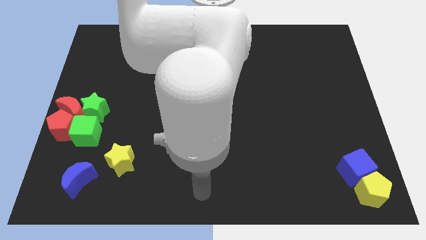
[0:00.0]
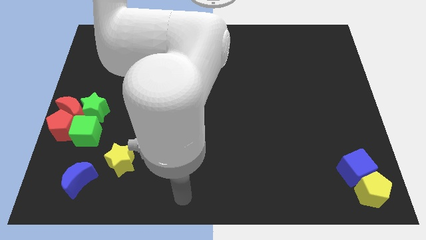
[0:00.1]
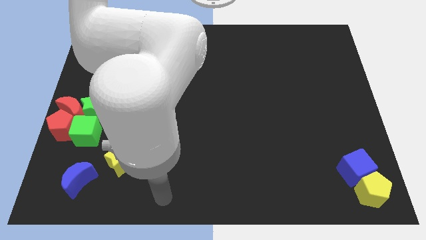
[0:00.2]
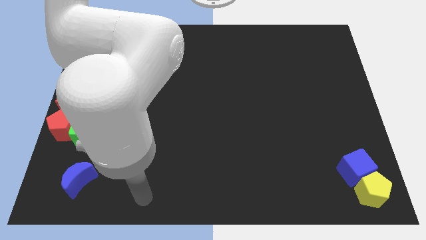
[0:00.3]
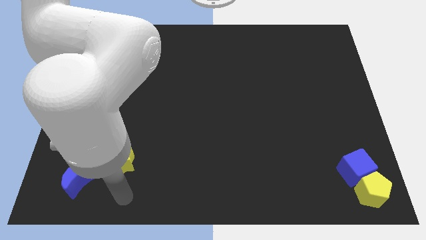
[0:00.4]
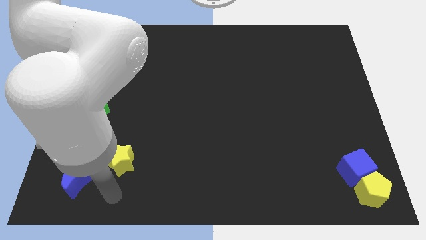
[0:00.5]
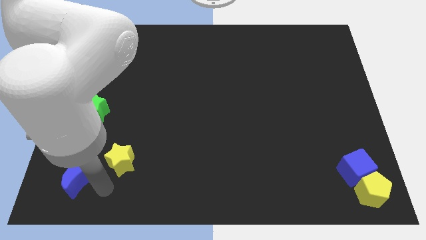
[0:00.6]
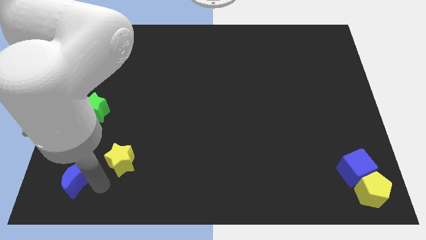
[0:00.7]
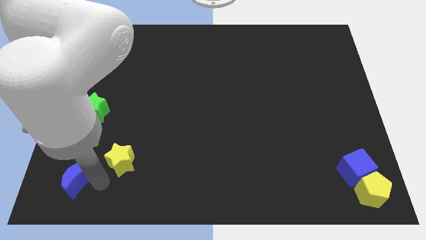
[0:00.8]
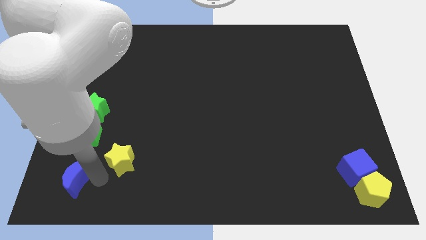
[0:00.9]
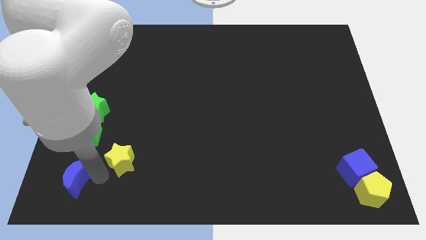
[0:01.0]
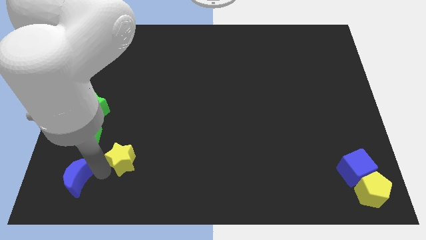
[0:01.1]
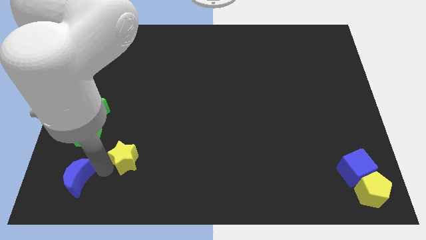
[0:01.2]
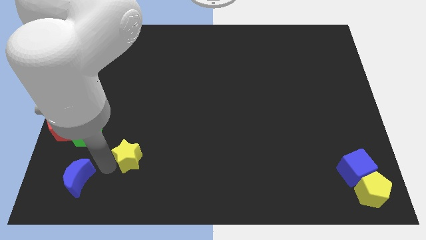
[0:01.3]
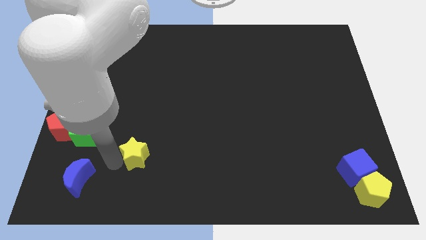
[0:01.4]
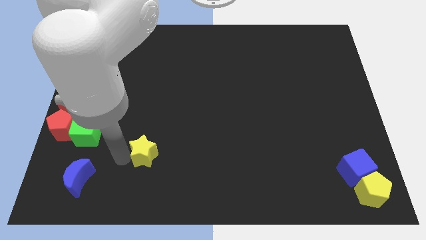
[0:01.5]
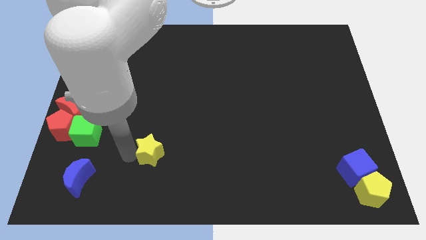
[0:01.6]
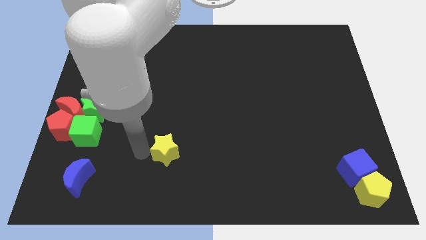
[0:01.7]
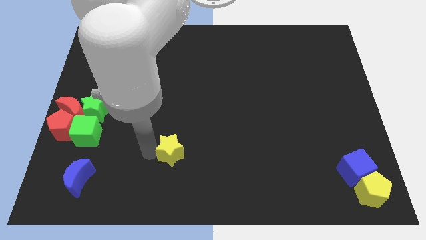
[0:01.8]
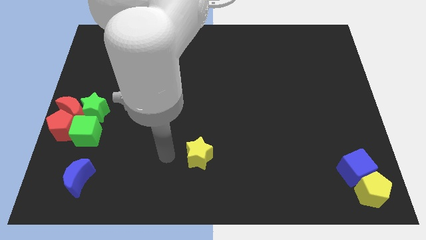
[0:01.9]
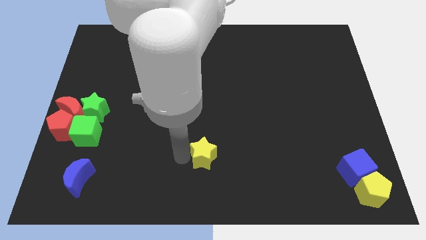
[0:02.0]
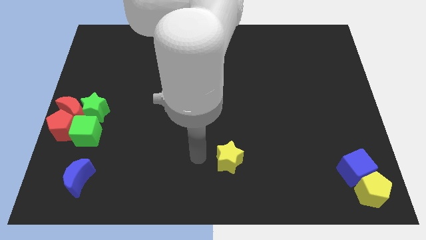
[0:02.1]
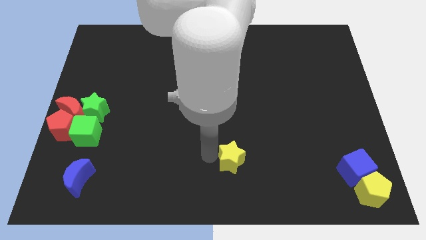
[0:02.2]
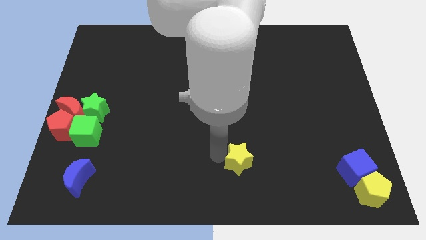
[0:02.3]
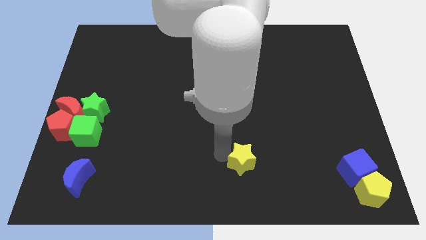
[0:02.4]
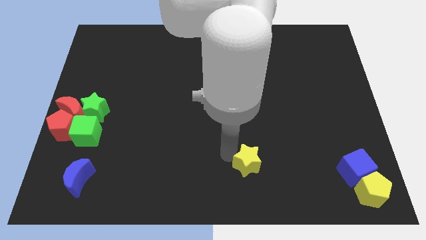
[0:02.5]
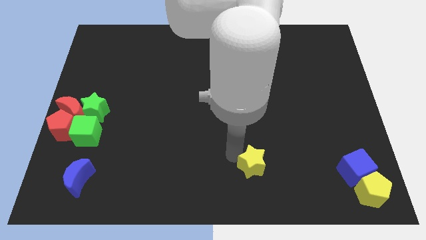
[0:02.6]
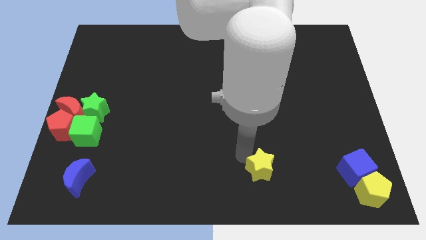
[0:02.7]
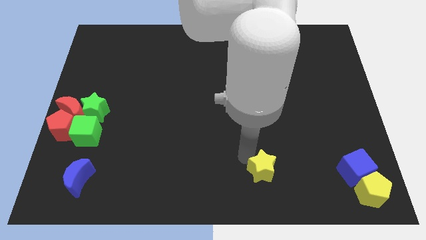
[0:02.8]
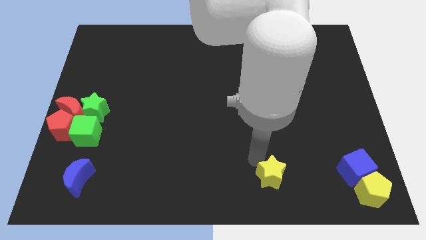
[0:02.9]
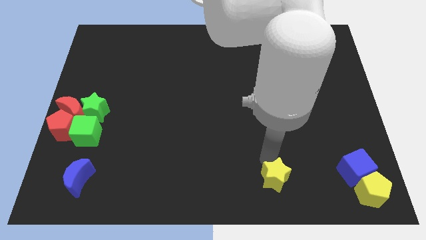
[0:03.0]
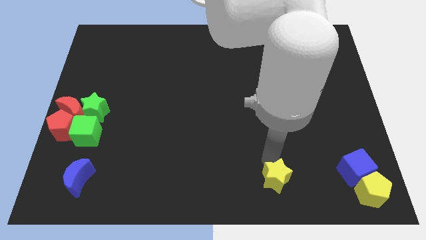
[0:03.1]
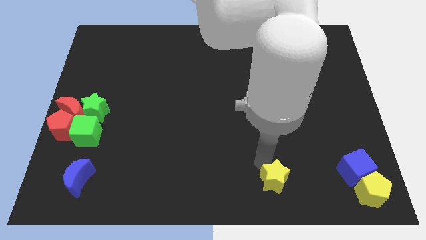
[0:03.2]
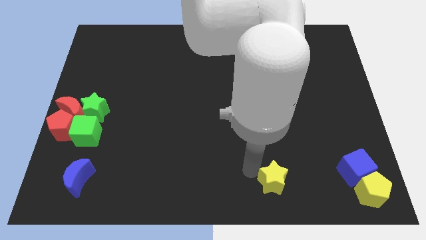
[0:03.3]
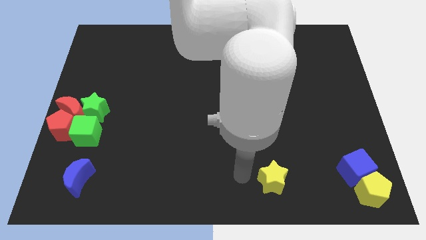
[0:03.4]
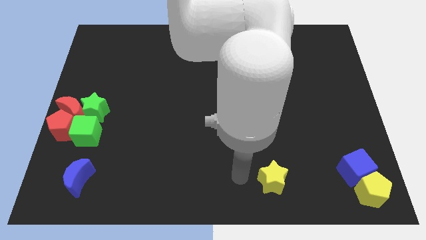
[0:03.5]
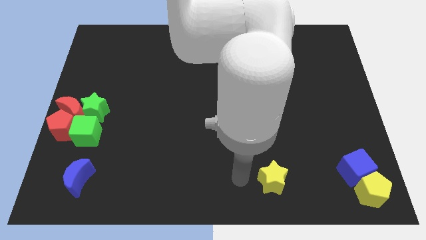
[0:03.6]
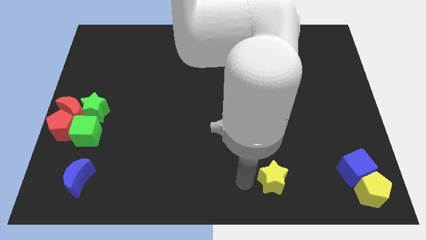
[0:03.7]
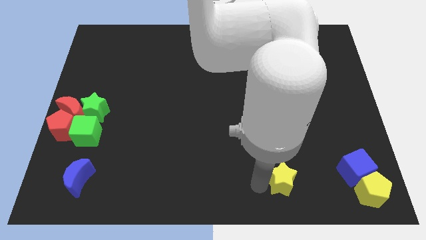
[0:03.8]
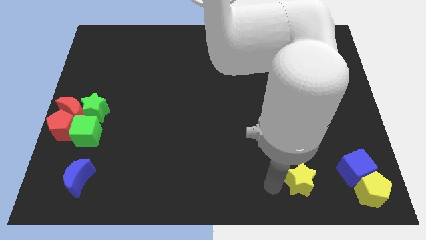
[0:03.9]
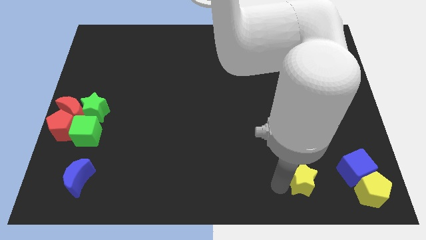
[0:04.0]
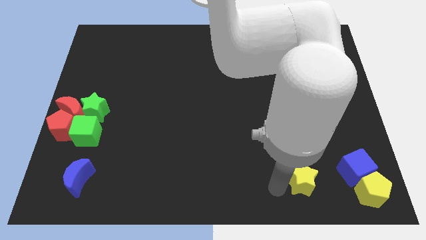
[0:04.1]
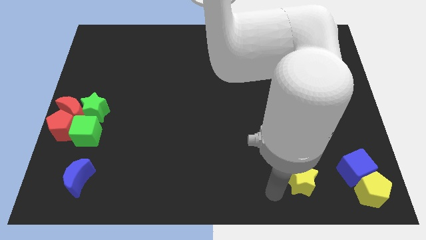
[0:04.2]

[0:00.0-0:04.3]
move the yellow star towards the bottom right

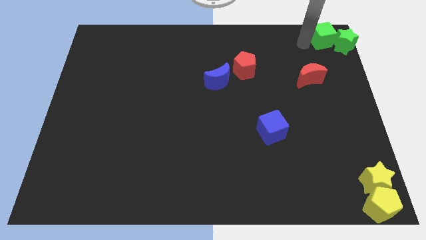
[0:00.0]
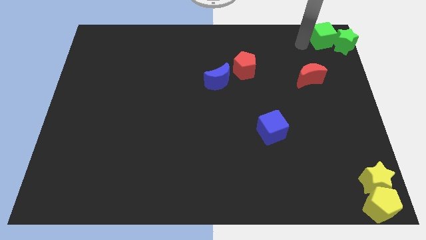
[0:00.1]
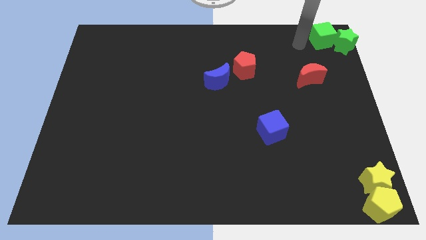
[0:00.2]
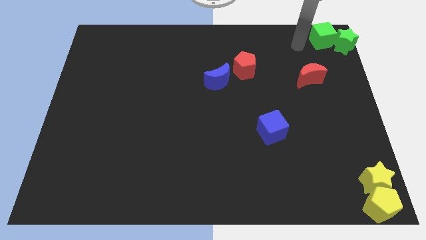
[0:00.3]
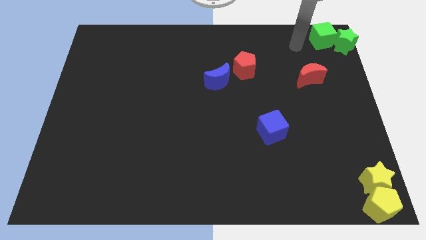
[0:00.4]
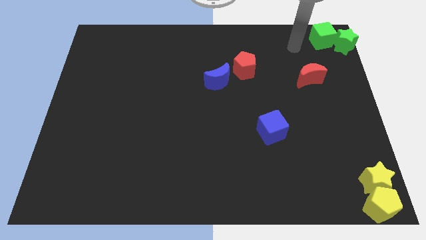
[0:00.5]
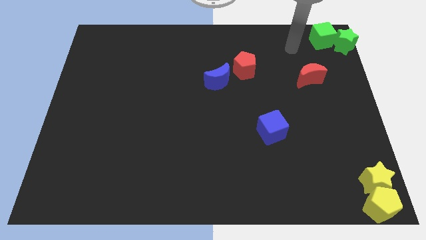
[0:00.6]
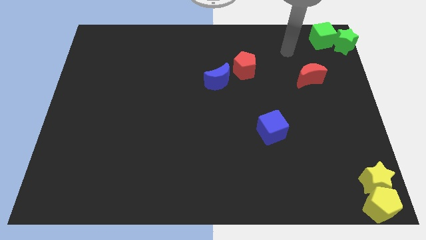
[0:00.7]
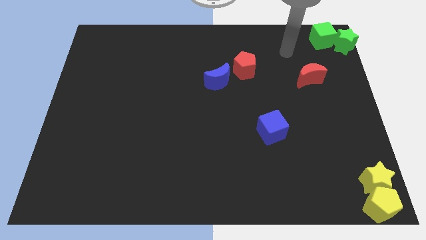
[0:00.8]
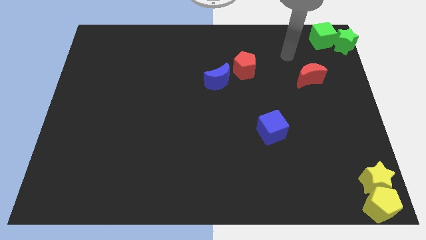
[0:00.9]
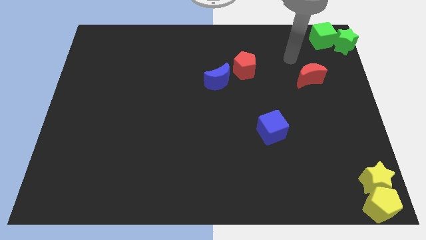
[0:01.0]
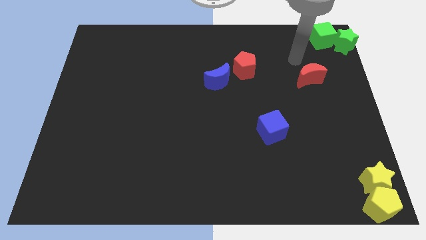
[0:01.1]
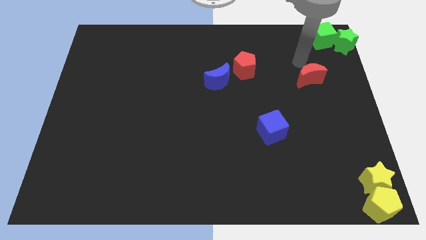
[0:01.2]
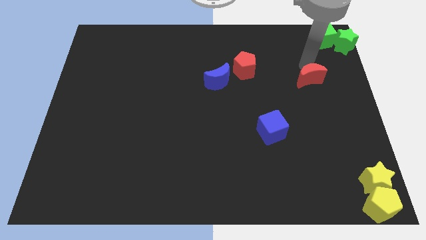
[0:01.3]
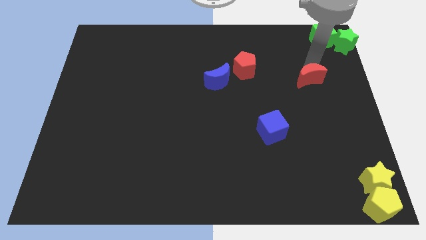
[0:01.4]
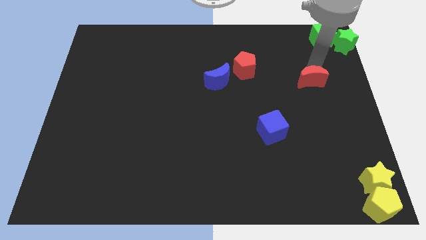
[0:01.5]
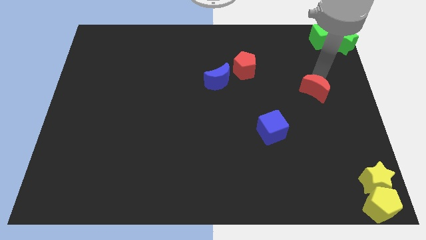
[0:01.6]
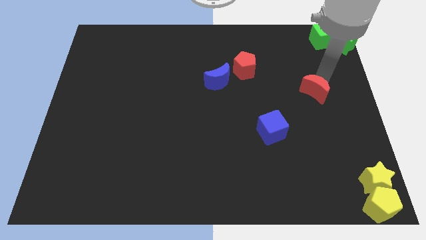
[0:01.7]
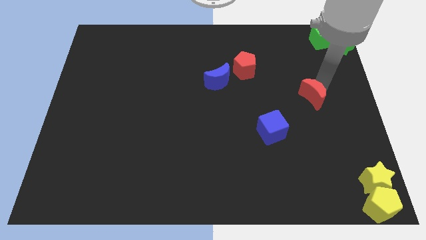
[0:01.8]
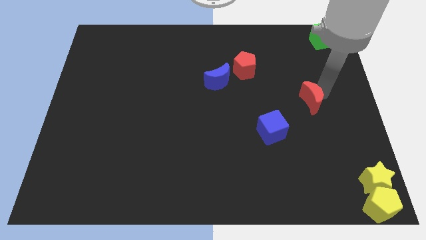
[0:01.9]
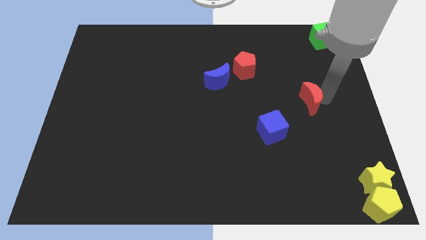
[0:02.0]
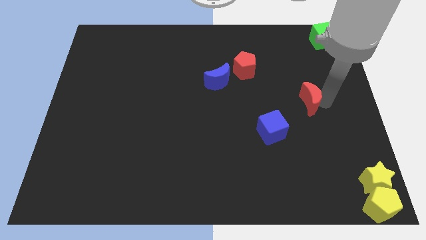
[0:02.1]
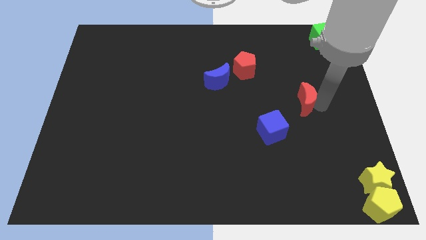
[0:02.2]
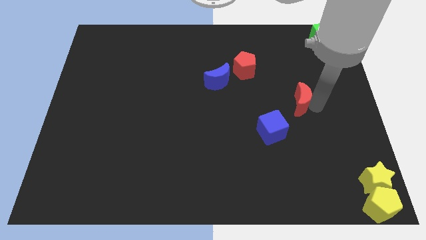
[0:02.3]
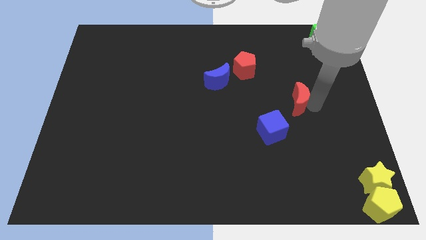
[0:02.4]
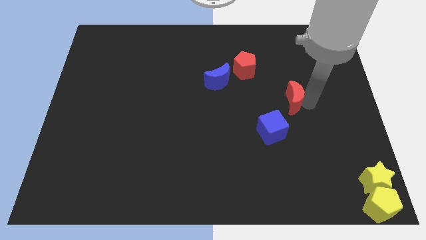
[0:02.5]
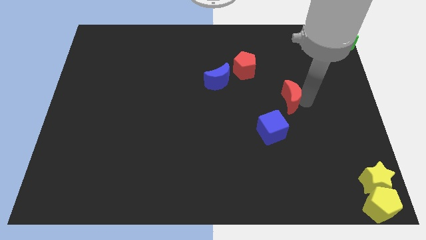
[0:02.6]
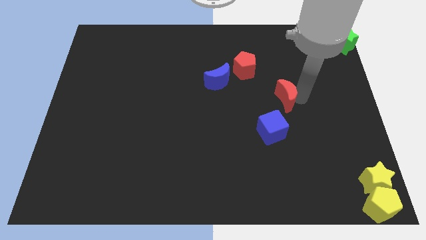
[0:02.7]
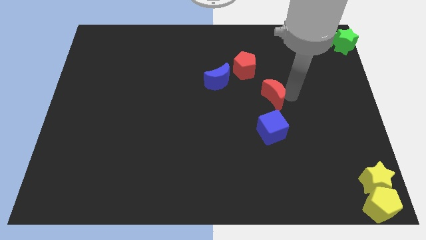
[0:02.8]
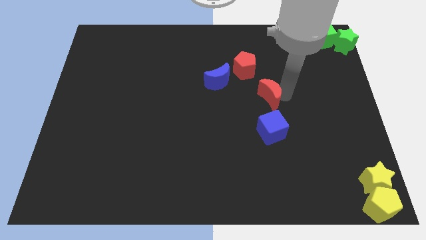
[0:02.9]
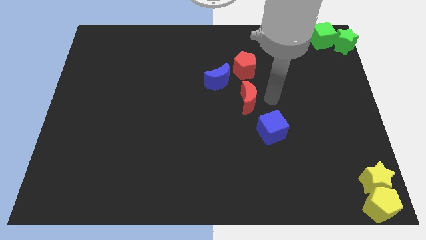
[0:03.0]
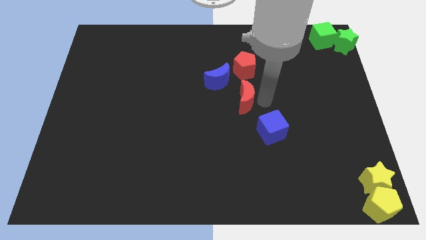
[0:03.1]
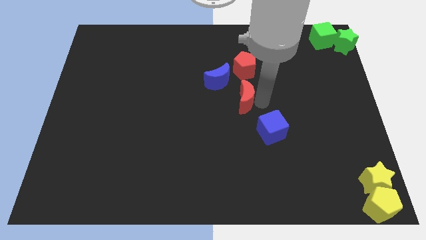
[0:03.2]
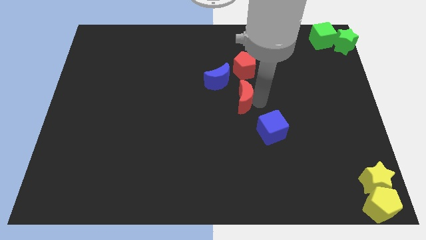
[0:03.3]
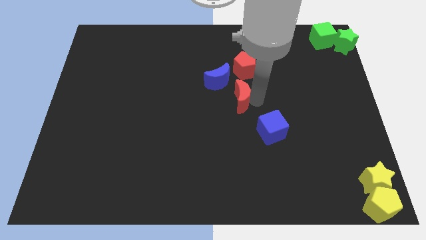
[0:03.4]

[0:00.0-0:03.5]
move the red crescent parallel below the red pentagon

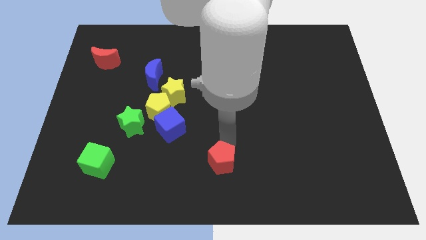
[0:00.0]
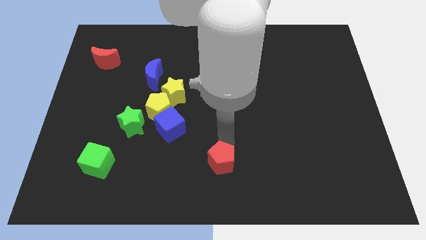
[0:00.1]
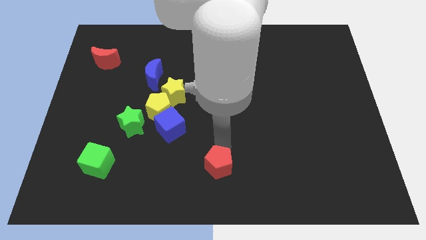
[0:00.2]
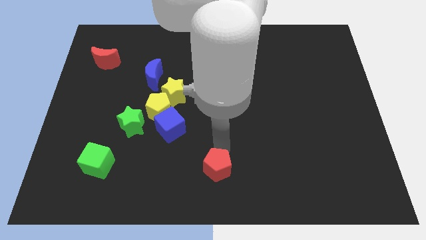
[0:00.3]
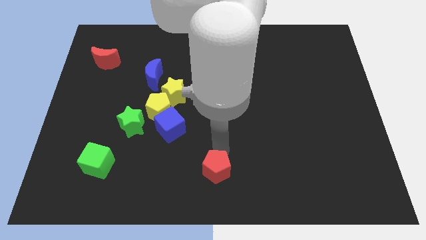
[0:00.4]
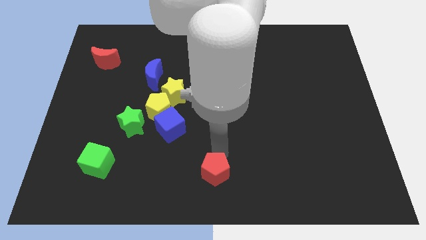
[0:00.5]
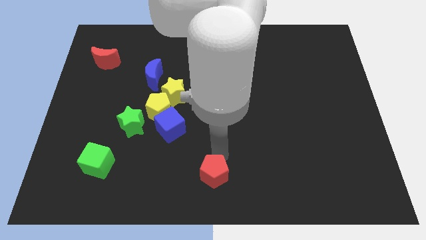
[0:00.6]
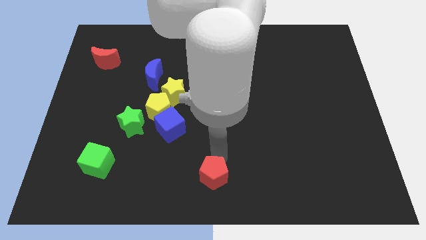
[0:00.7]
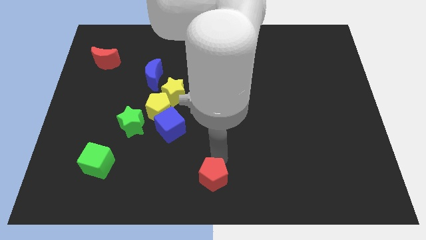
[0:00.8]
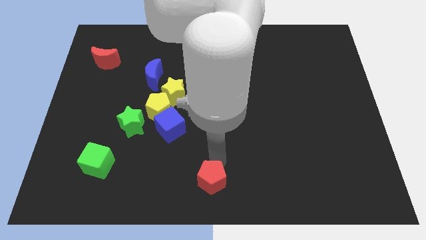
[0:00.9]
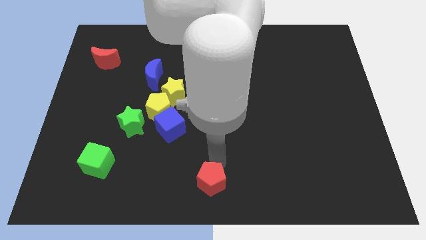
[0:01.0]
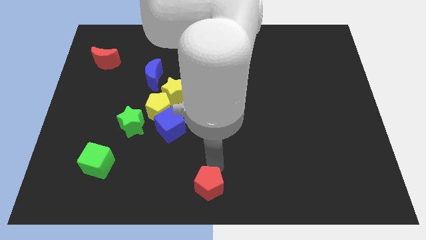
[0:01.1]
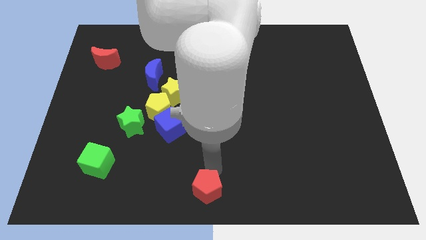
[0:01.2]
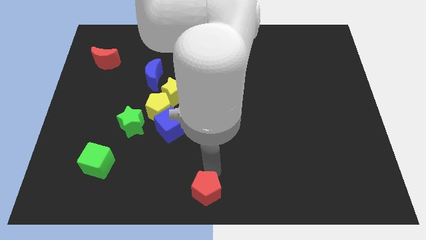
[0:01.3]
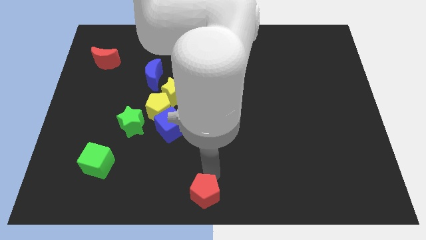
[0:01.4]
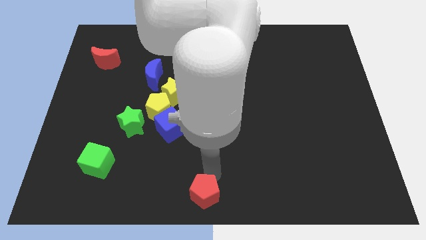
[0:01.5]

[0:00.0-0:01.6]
place the red pentagon to the bottom center
